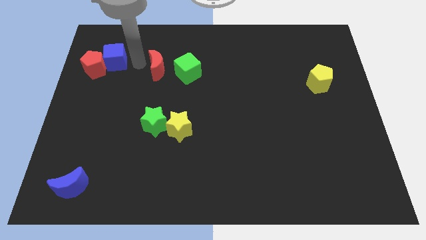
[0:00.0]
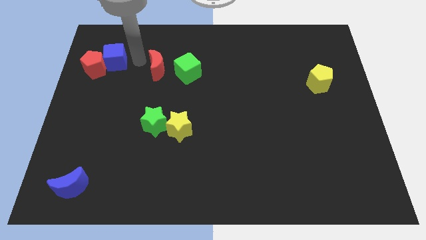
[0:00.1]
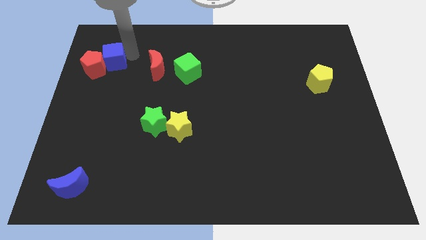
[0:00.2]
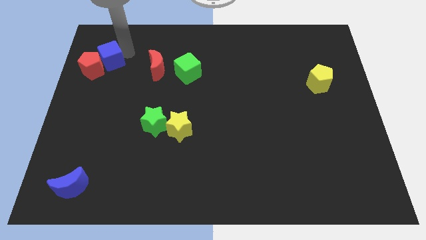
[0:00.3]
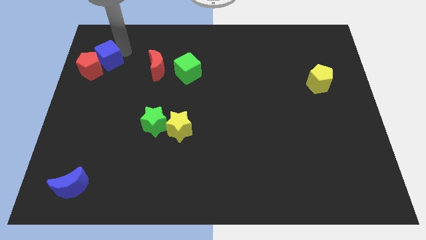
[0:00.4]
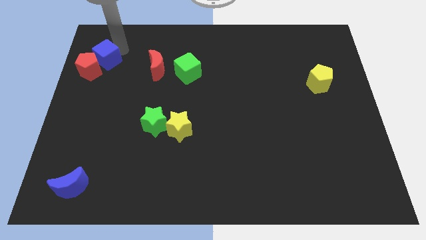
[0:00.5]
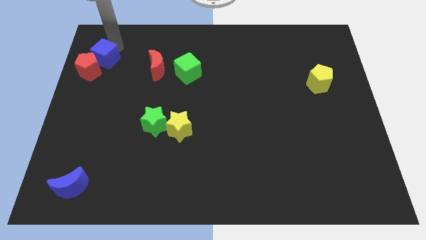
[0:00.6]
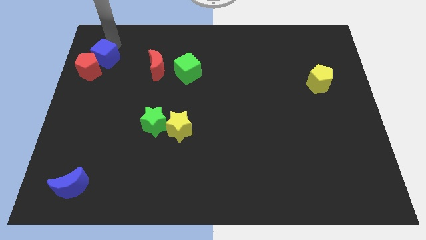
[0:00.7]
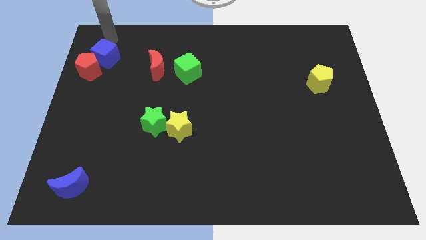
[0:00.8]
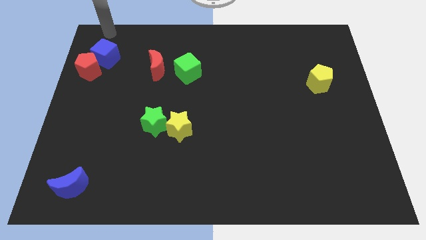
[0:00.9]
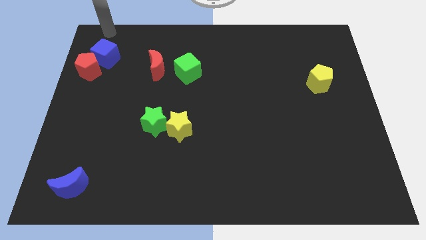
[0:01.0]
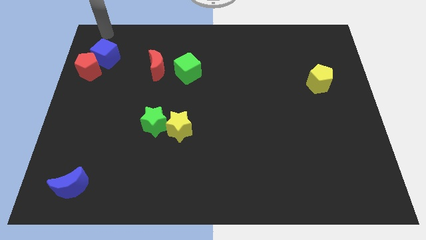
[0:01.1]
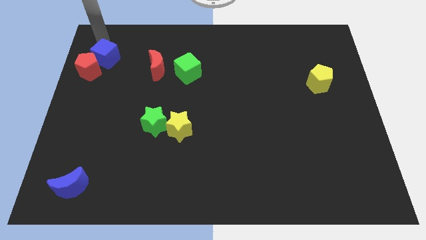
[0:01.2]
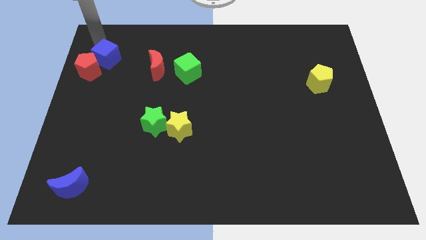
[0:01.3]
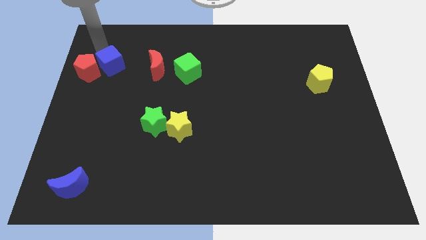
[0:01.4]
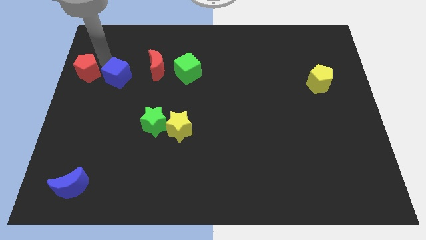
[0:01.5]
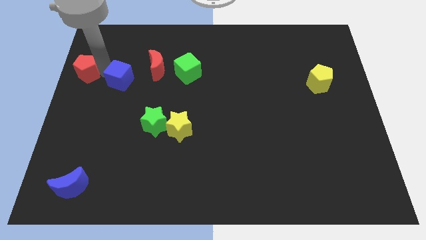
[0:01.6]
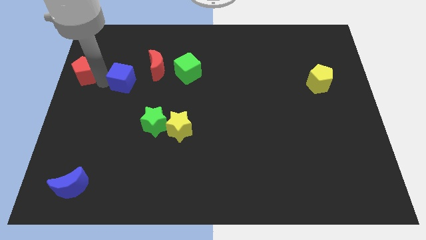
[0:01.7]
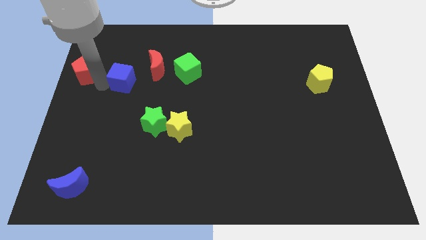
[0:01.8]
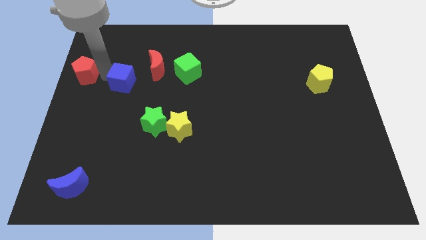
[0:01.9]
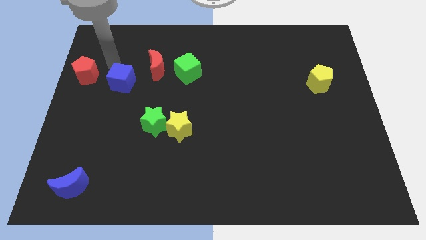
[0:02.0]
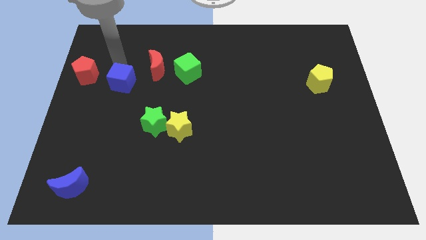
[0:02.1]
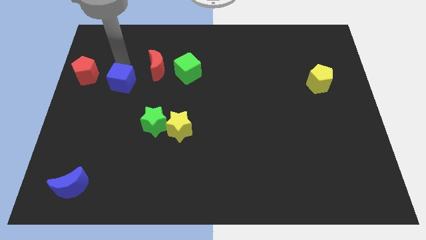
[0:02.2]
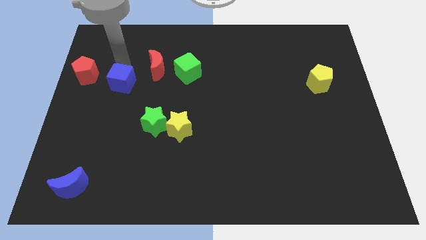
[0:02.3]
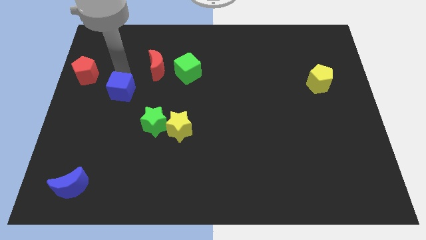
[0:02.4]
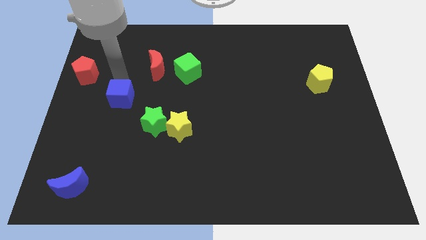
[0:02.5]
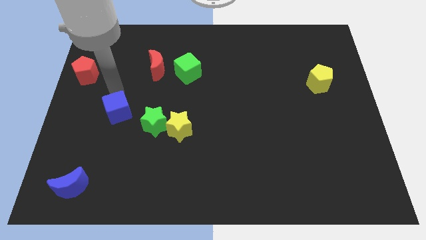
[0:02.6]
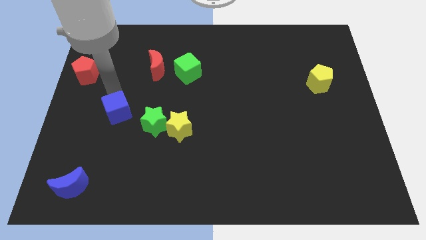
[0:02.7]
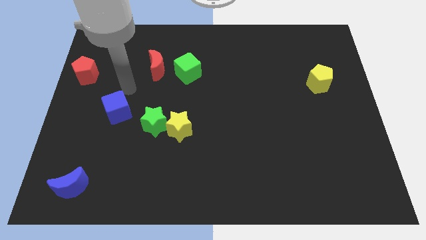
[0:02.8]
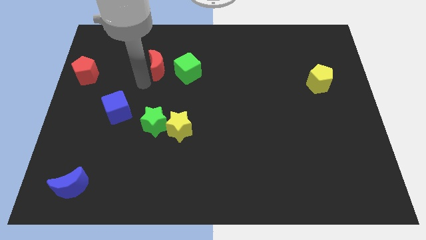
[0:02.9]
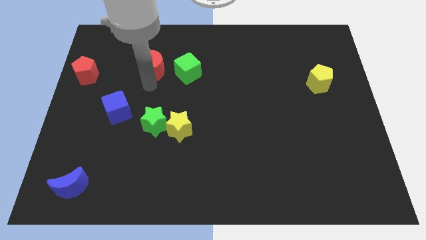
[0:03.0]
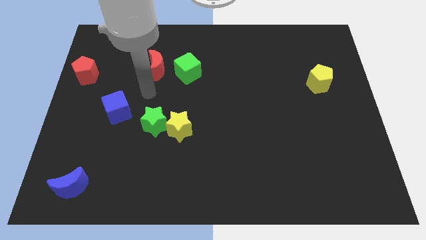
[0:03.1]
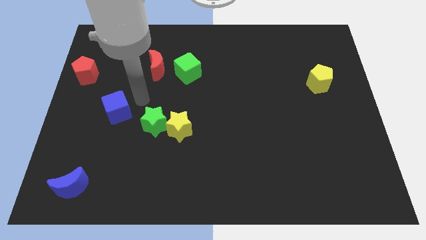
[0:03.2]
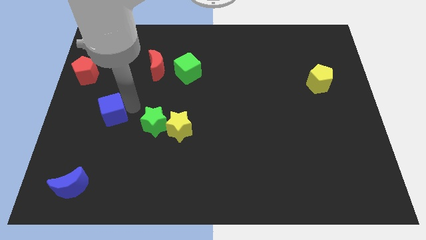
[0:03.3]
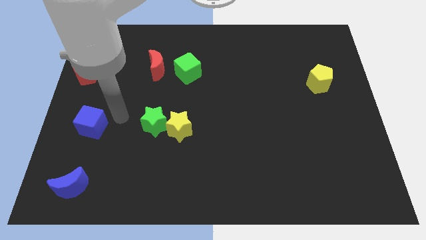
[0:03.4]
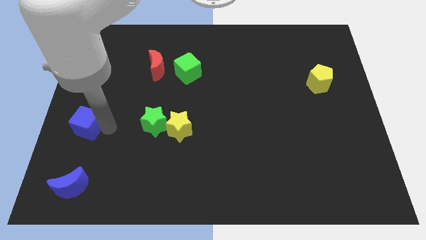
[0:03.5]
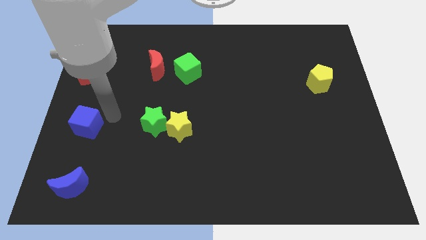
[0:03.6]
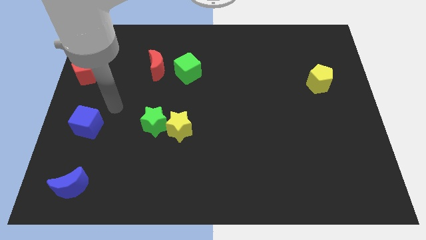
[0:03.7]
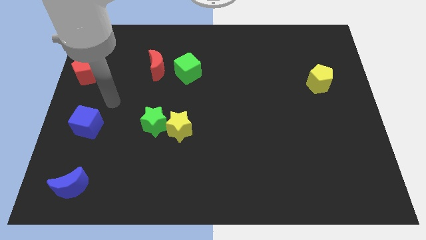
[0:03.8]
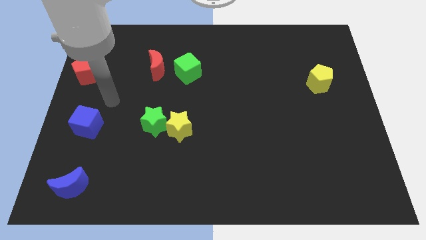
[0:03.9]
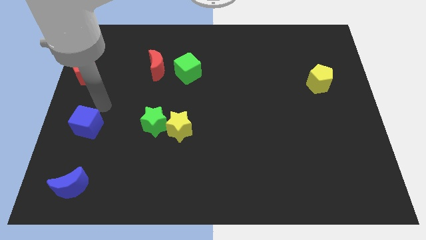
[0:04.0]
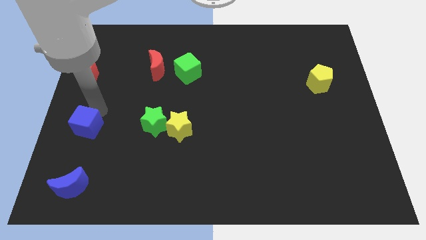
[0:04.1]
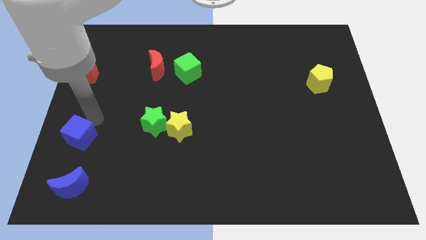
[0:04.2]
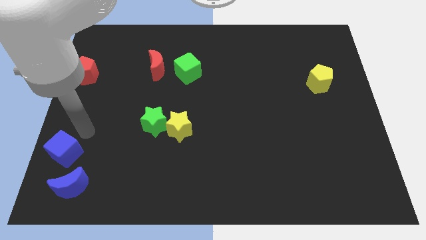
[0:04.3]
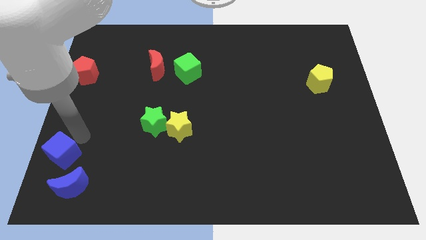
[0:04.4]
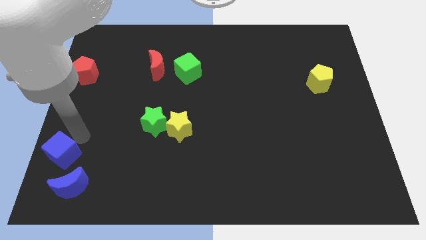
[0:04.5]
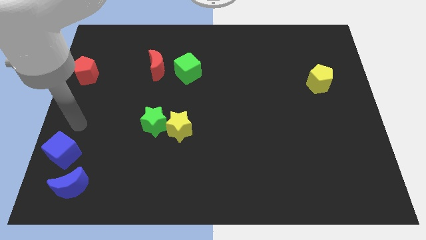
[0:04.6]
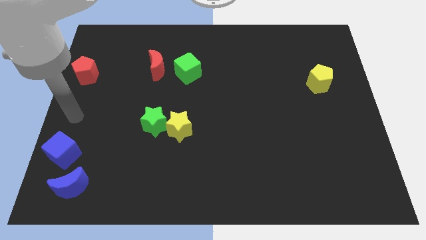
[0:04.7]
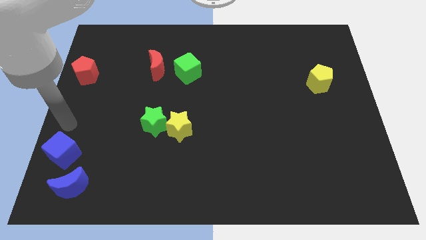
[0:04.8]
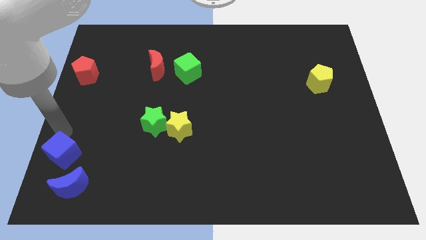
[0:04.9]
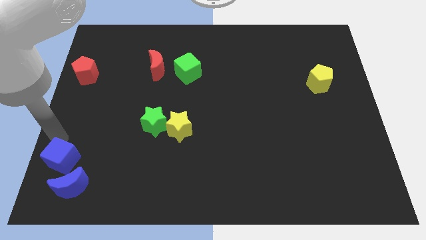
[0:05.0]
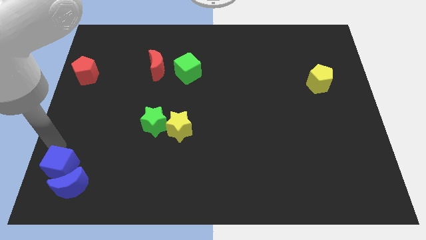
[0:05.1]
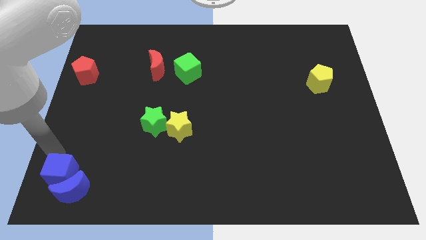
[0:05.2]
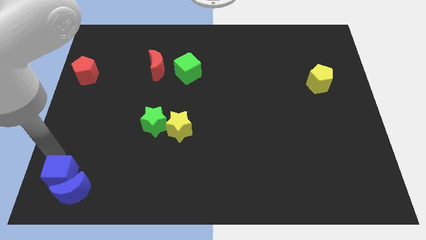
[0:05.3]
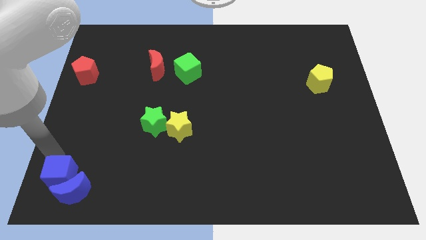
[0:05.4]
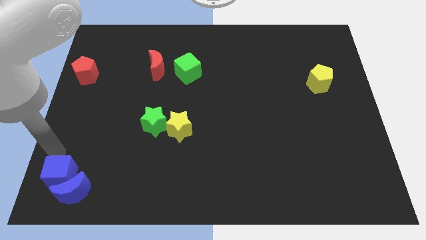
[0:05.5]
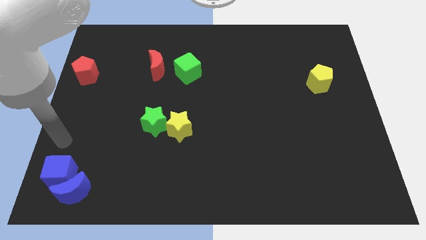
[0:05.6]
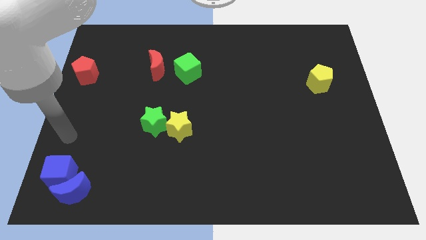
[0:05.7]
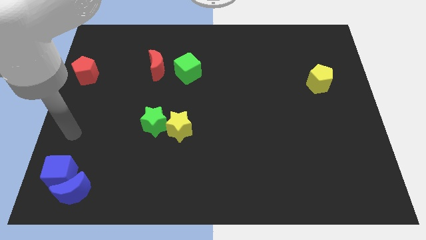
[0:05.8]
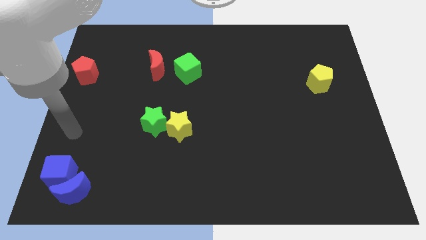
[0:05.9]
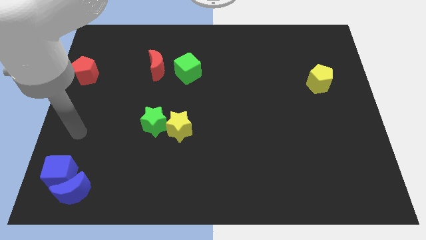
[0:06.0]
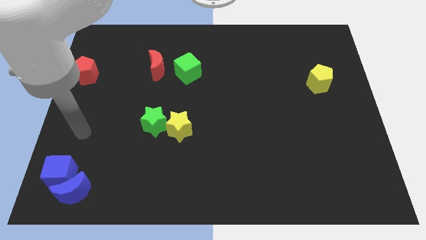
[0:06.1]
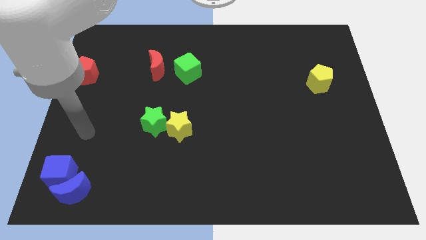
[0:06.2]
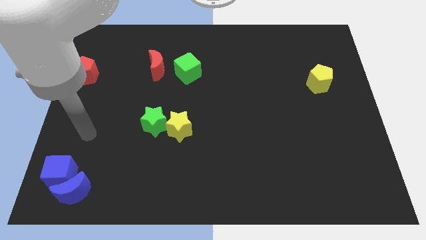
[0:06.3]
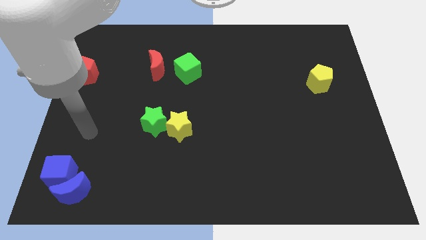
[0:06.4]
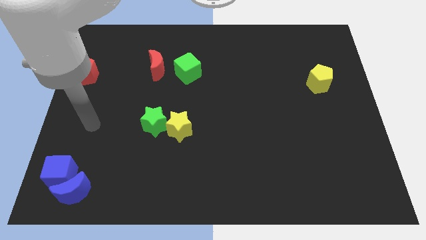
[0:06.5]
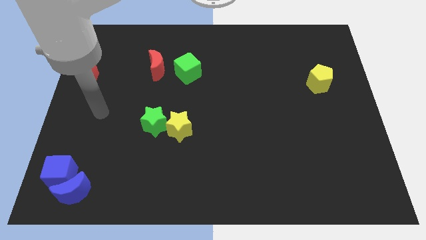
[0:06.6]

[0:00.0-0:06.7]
move the blue cube into blue crescent

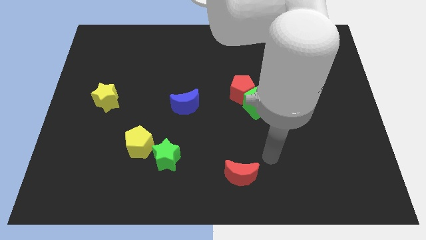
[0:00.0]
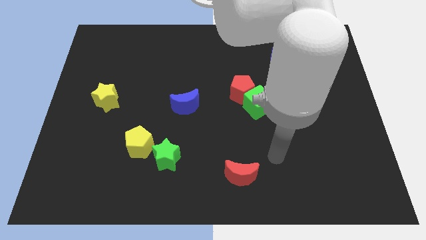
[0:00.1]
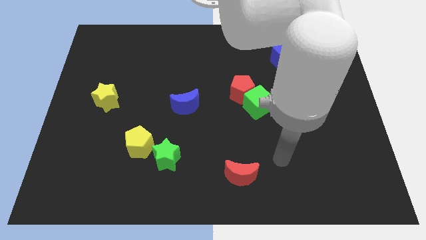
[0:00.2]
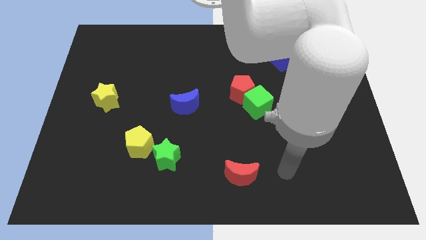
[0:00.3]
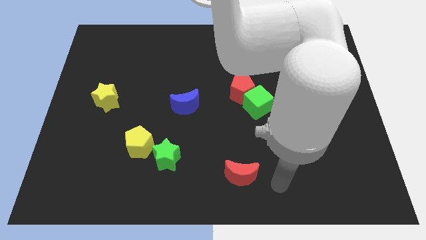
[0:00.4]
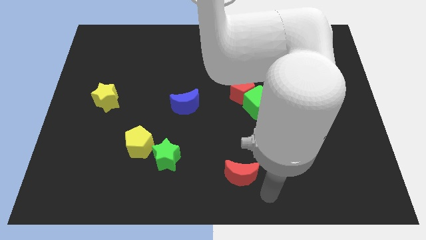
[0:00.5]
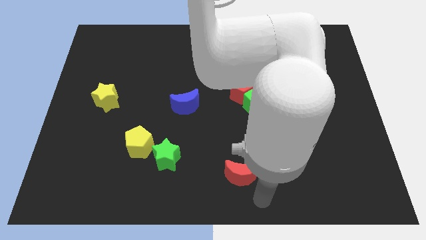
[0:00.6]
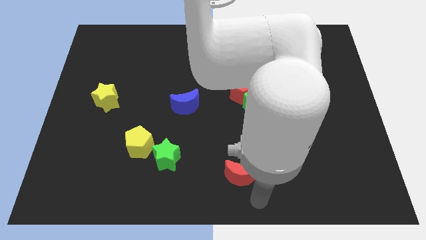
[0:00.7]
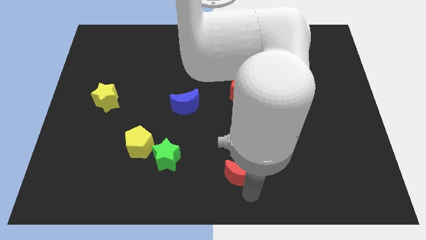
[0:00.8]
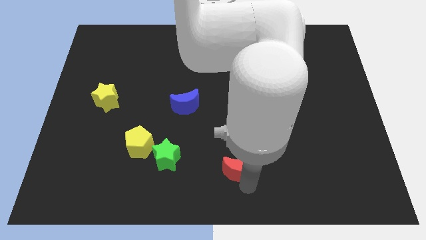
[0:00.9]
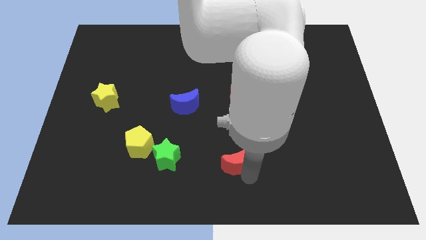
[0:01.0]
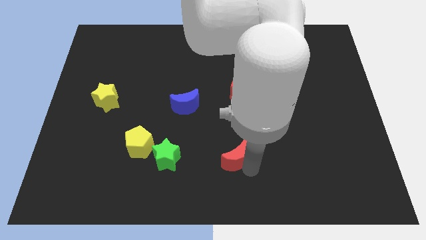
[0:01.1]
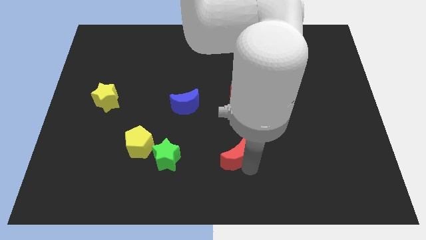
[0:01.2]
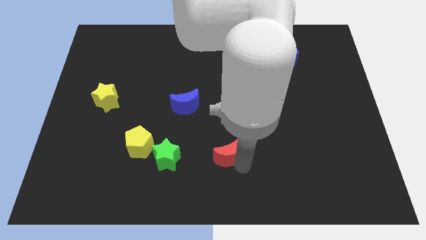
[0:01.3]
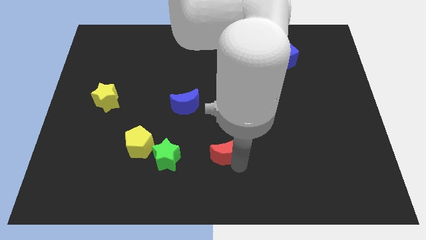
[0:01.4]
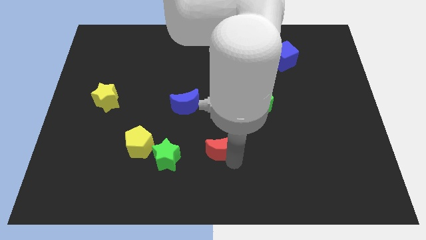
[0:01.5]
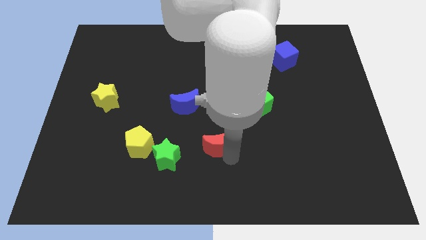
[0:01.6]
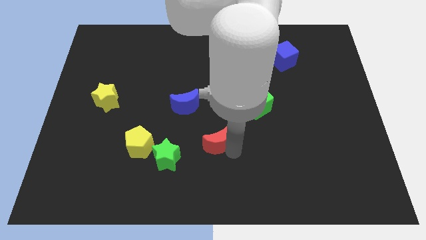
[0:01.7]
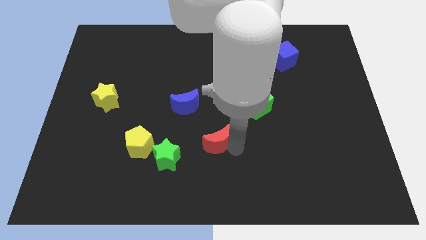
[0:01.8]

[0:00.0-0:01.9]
move the red moon diagonally bottom left to the red pentagon

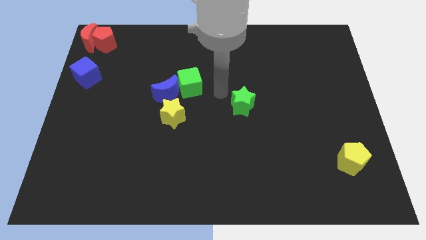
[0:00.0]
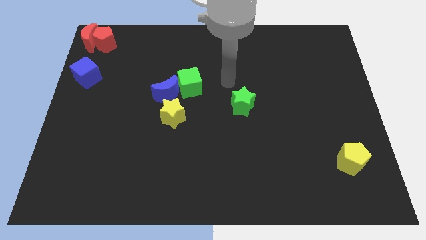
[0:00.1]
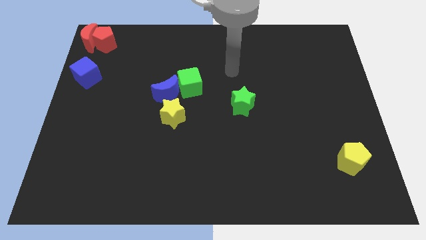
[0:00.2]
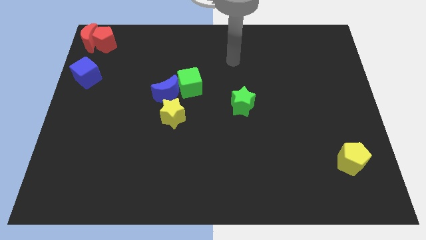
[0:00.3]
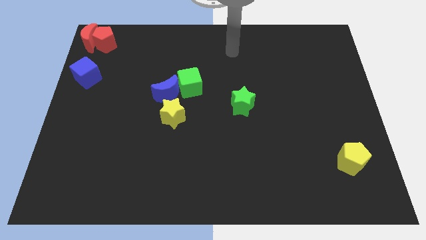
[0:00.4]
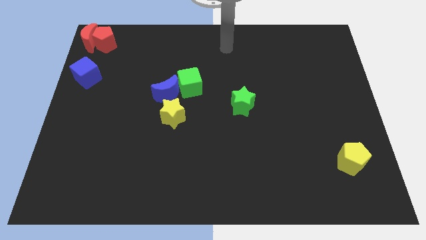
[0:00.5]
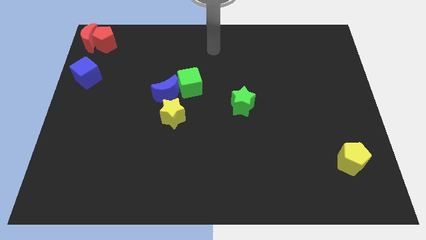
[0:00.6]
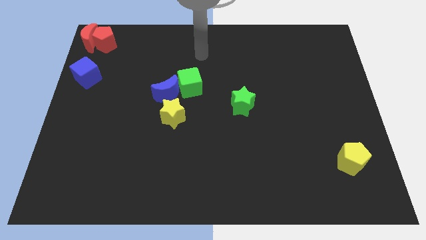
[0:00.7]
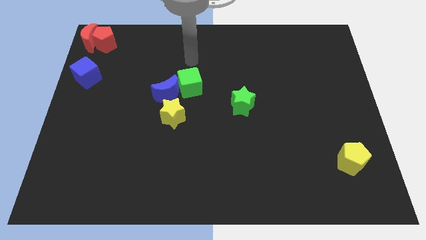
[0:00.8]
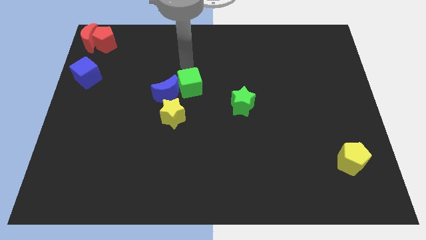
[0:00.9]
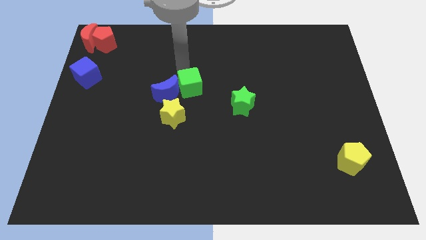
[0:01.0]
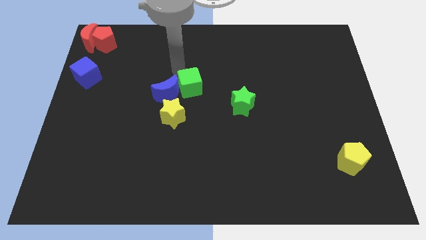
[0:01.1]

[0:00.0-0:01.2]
place your arm at the top of the green cube
